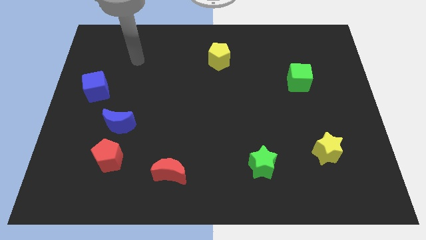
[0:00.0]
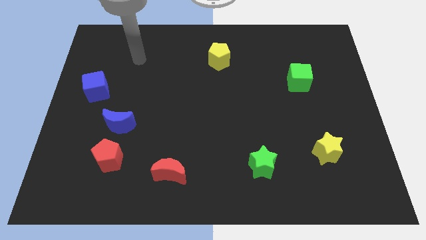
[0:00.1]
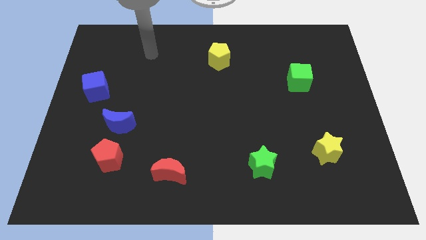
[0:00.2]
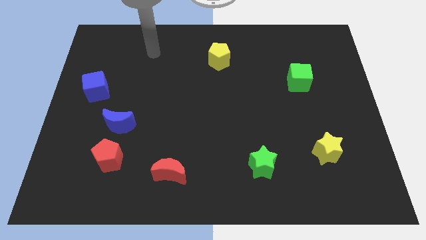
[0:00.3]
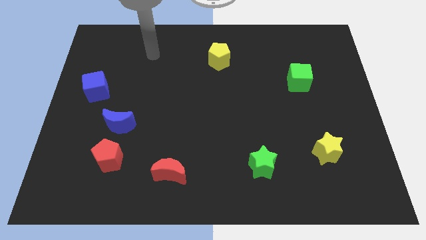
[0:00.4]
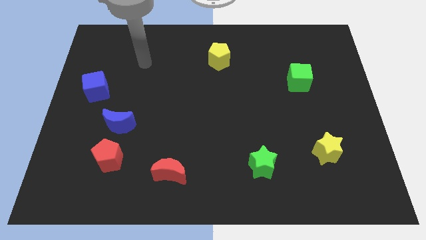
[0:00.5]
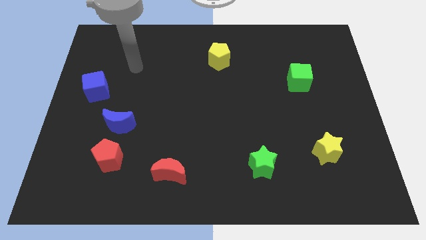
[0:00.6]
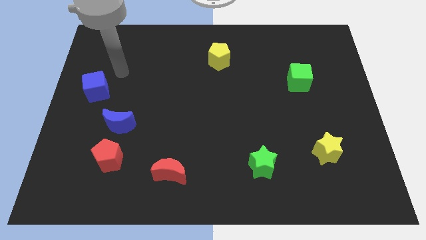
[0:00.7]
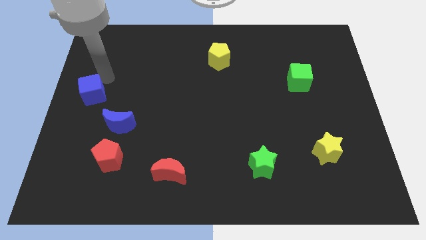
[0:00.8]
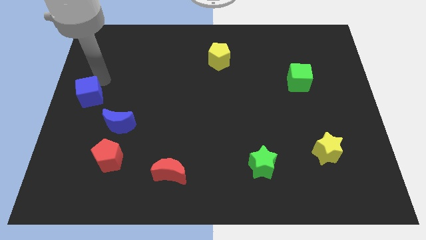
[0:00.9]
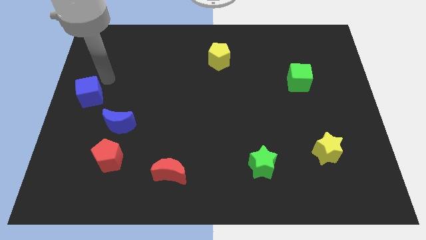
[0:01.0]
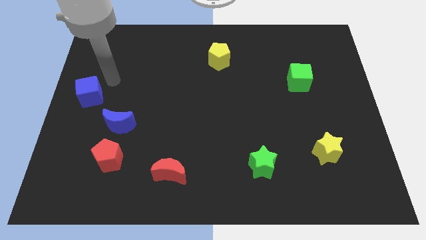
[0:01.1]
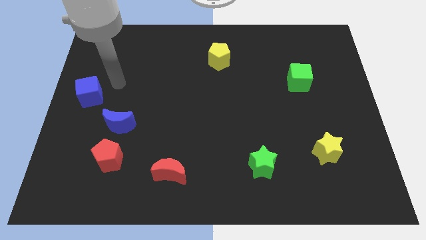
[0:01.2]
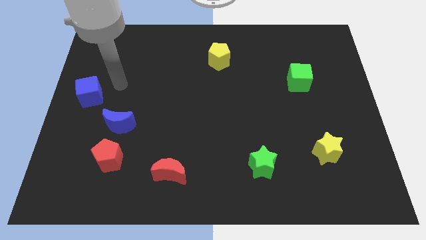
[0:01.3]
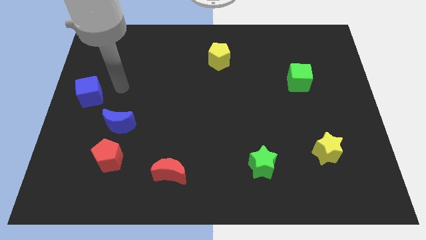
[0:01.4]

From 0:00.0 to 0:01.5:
move your arm to the right side of the blue cube

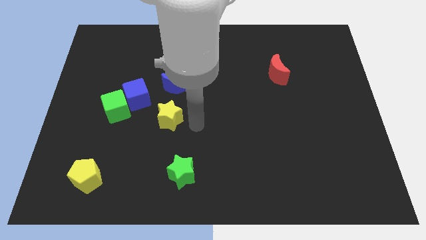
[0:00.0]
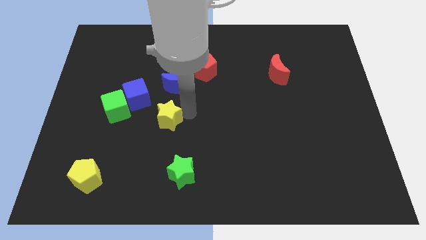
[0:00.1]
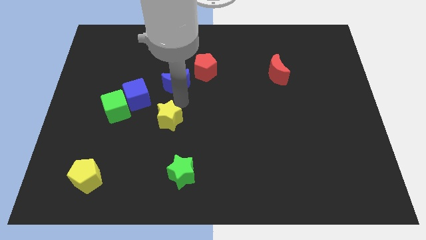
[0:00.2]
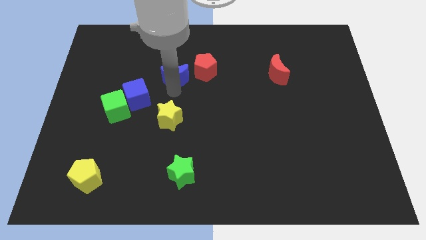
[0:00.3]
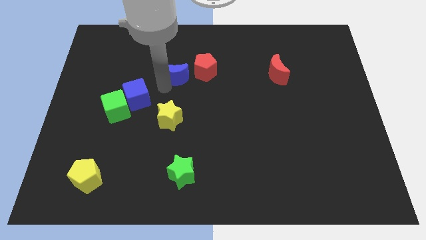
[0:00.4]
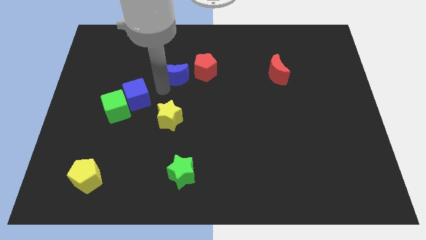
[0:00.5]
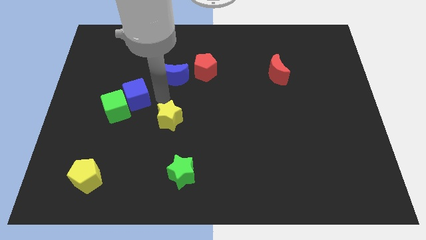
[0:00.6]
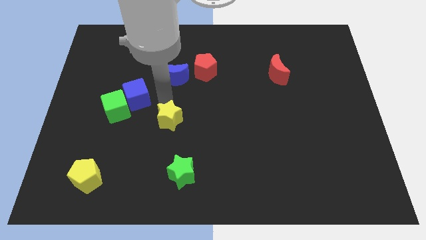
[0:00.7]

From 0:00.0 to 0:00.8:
slightly move the blue crescent to the top

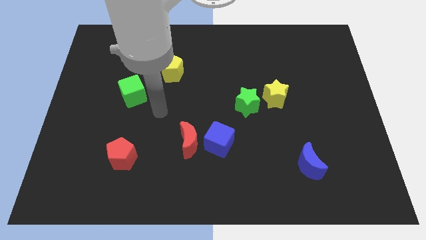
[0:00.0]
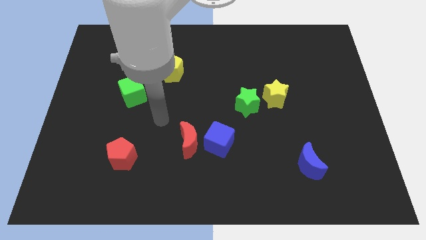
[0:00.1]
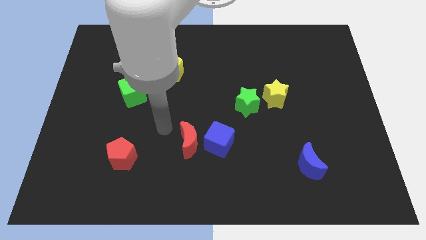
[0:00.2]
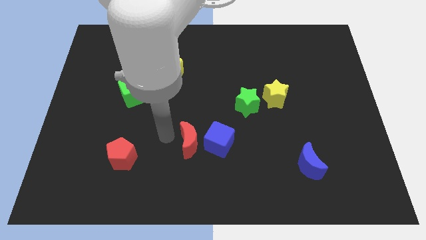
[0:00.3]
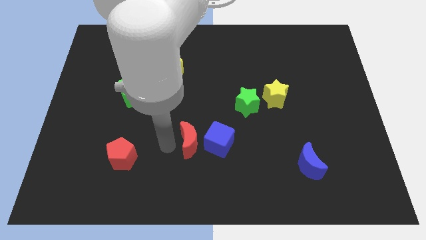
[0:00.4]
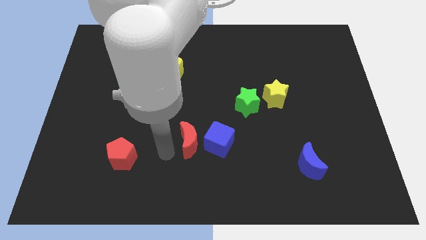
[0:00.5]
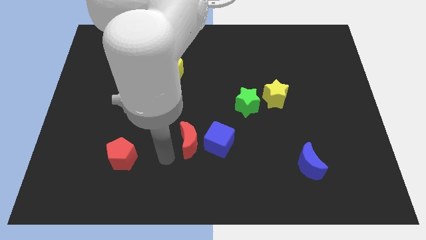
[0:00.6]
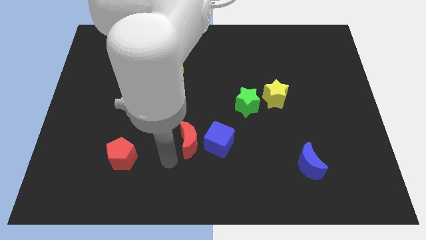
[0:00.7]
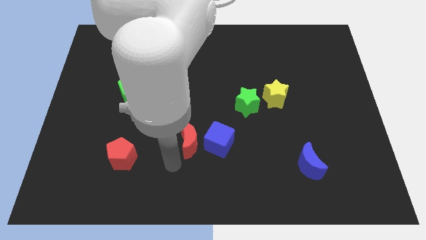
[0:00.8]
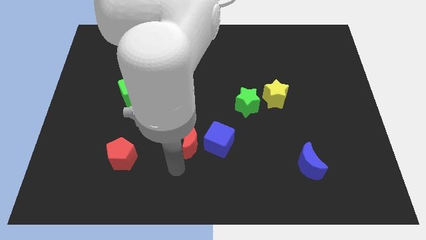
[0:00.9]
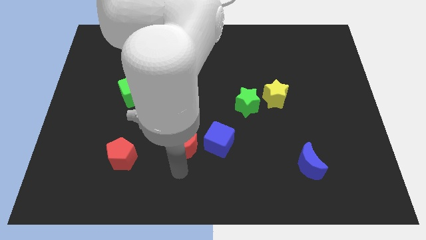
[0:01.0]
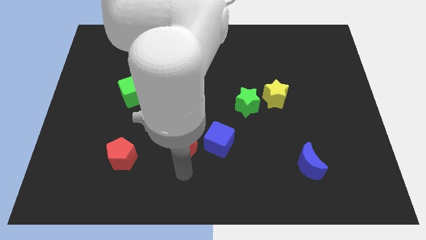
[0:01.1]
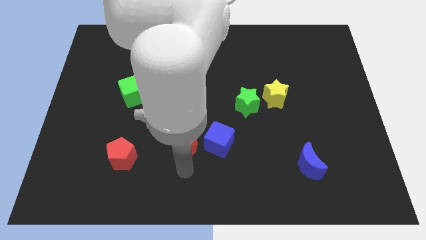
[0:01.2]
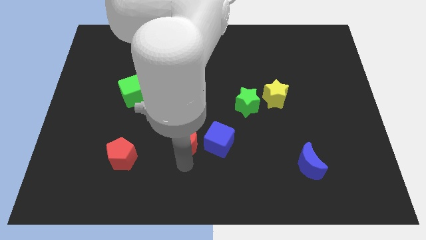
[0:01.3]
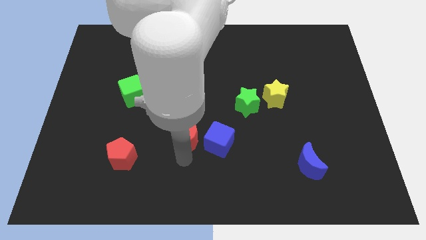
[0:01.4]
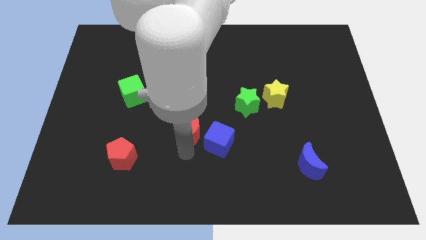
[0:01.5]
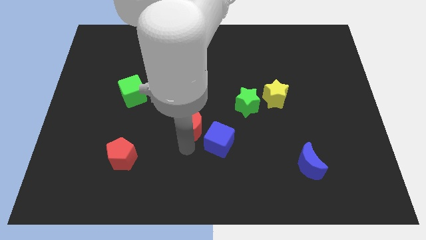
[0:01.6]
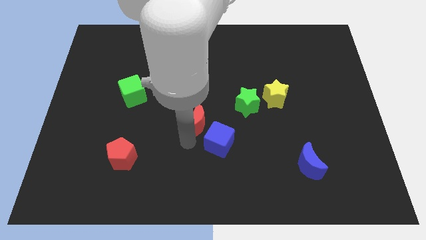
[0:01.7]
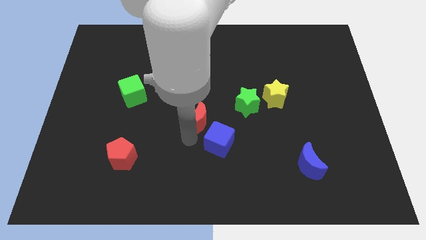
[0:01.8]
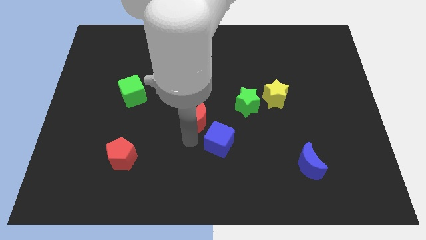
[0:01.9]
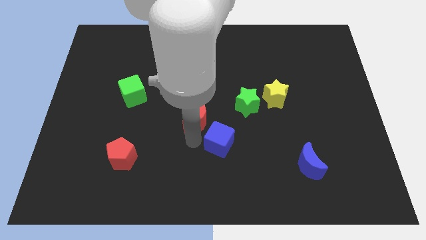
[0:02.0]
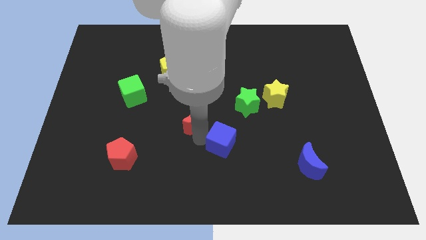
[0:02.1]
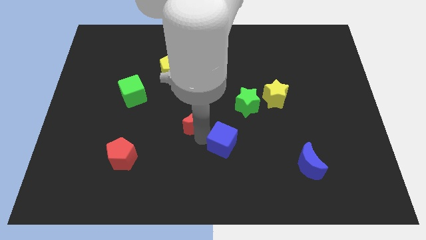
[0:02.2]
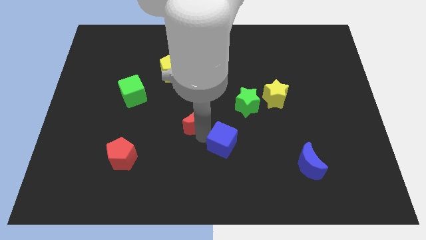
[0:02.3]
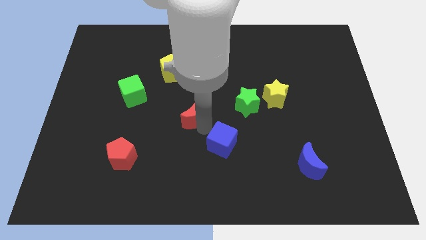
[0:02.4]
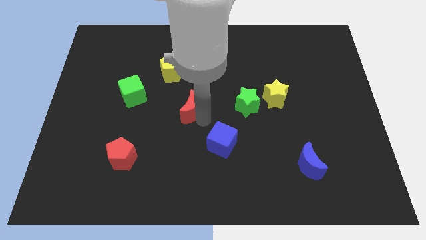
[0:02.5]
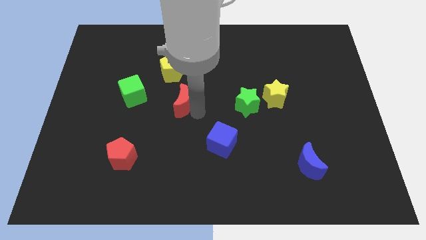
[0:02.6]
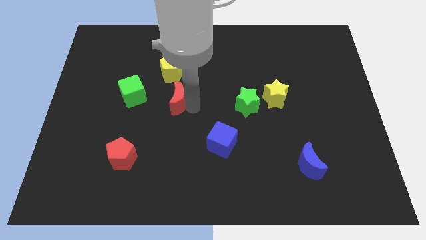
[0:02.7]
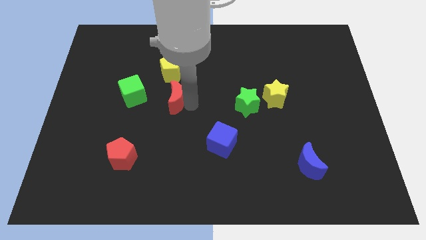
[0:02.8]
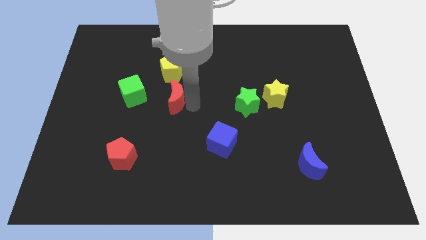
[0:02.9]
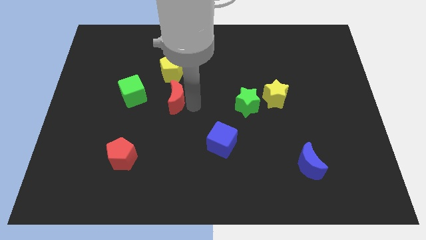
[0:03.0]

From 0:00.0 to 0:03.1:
move red moon horizontal to the green cube

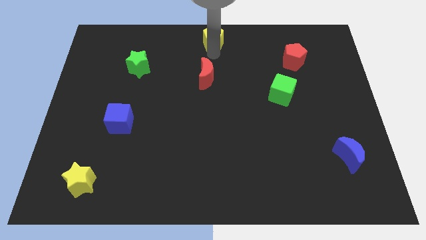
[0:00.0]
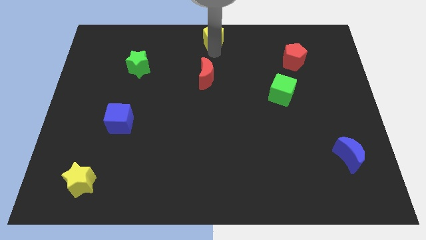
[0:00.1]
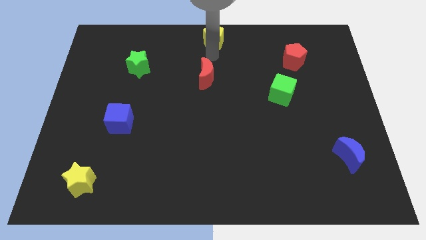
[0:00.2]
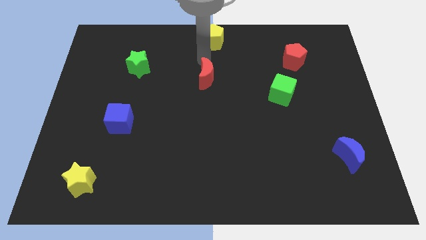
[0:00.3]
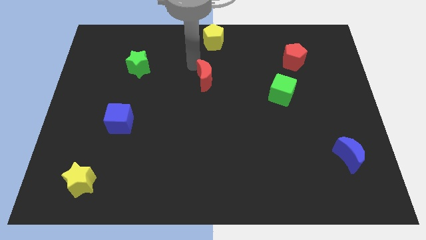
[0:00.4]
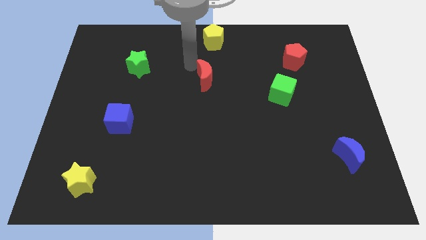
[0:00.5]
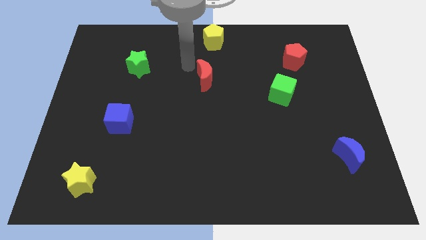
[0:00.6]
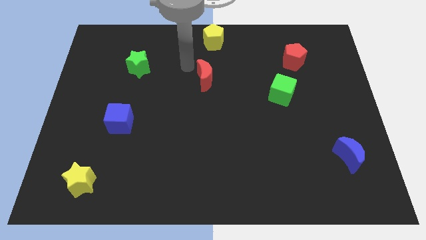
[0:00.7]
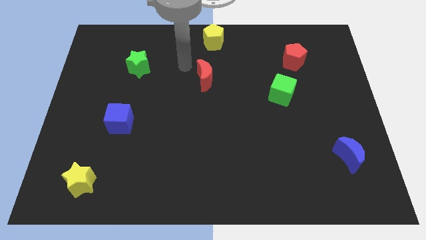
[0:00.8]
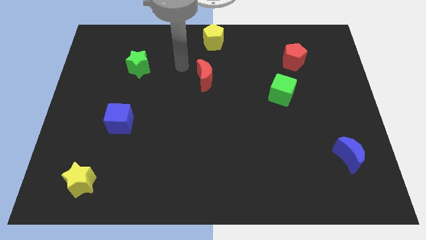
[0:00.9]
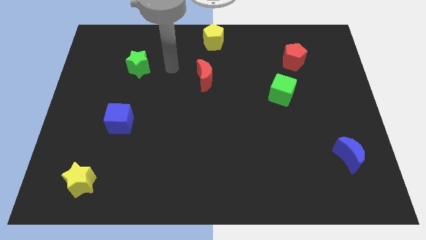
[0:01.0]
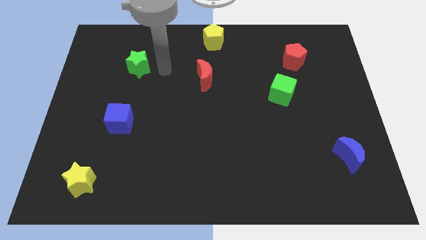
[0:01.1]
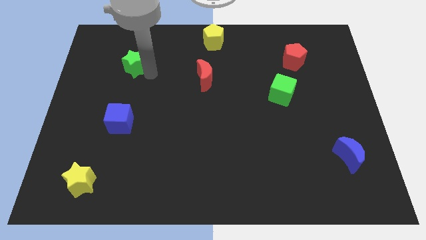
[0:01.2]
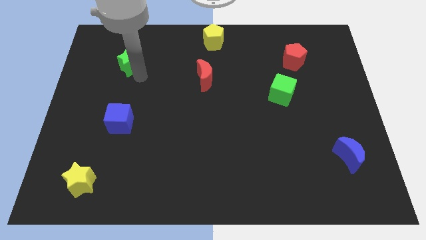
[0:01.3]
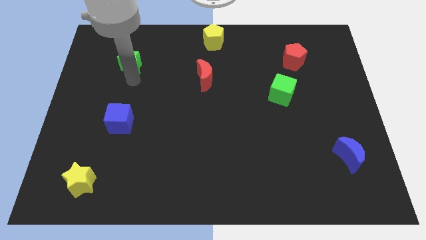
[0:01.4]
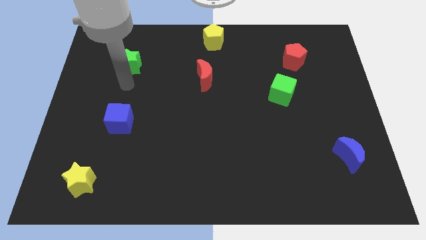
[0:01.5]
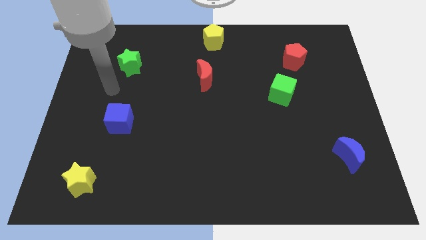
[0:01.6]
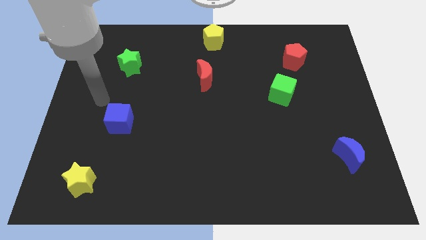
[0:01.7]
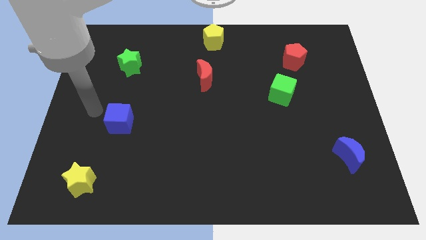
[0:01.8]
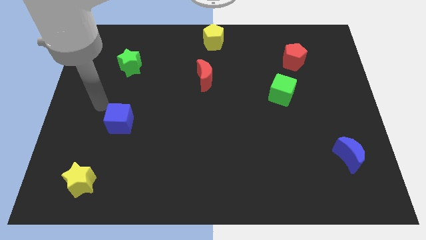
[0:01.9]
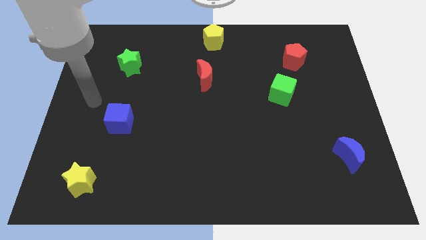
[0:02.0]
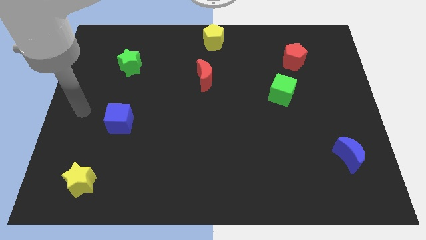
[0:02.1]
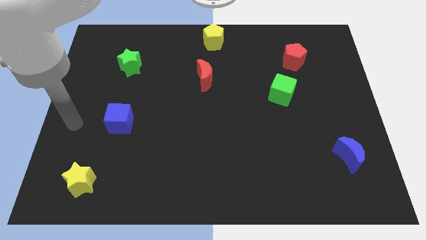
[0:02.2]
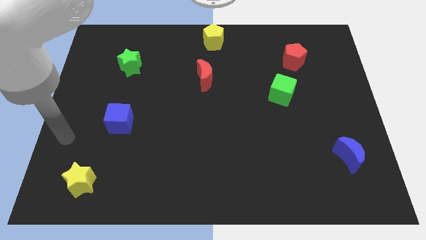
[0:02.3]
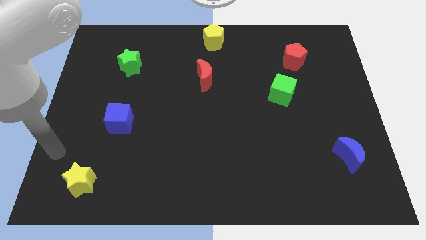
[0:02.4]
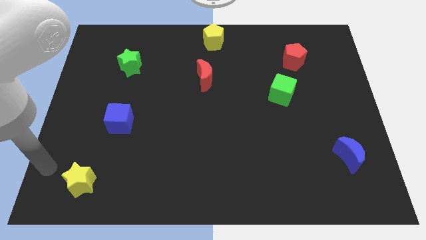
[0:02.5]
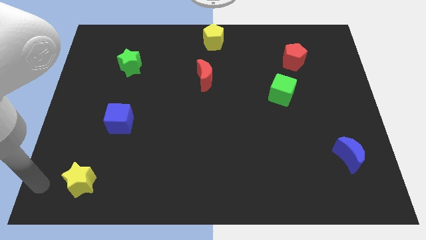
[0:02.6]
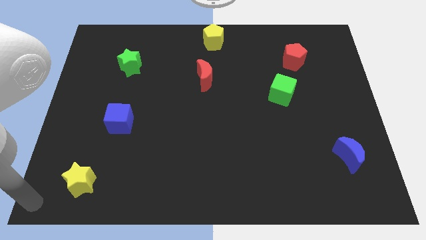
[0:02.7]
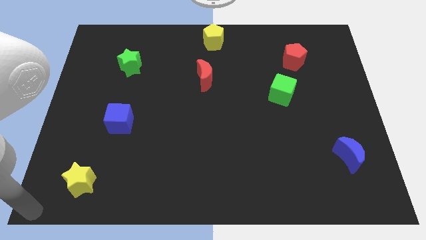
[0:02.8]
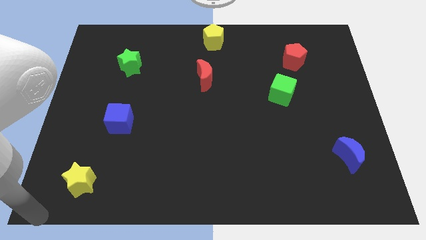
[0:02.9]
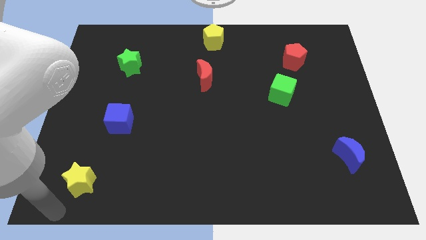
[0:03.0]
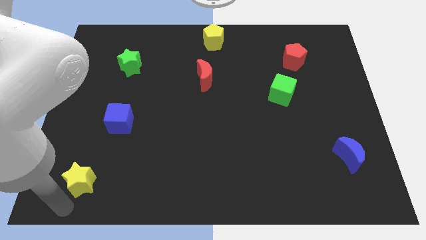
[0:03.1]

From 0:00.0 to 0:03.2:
push the green star slightly to the left side of the board

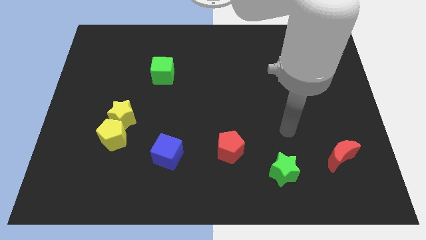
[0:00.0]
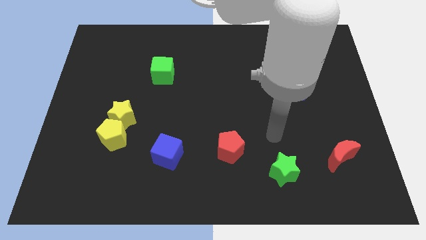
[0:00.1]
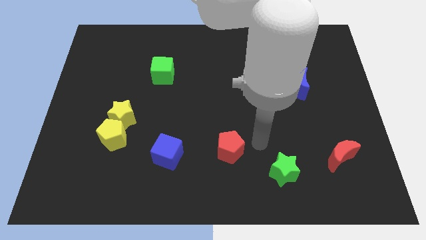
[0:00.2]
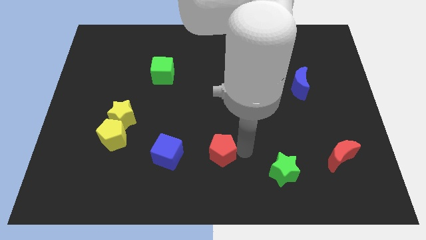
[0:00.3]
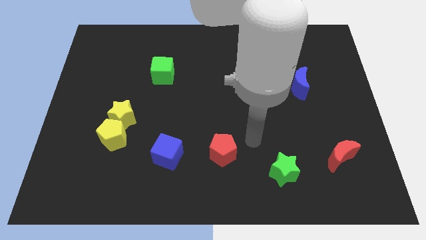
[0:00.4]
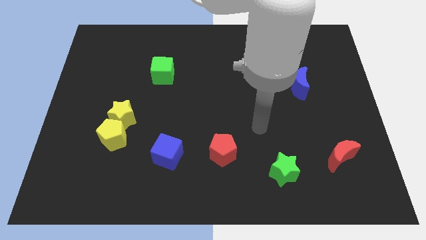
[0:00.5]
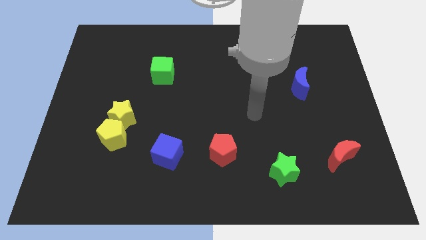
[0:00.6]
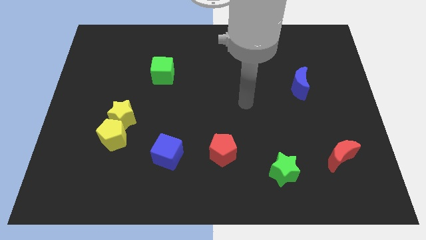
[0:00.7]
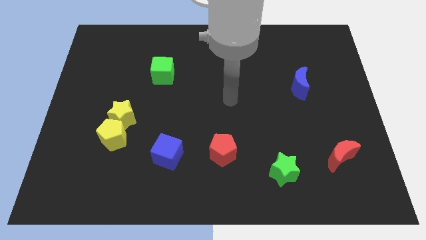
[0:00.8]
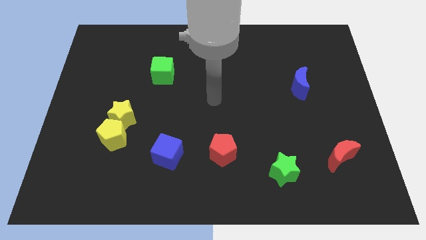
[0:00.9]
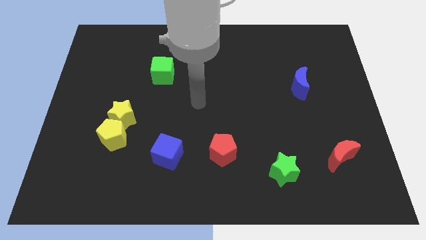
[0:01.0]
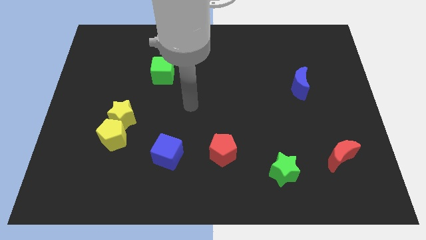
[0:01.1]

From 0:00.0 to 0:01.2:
push the red pentagon towards the blue cube
